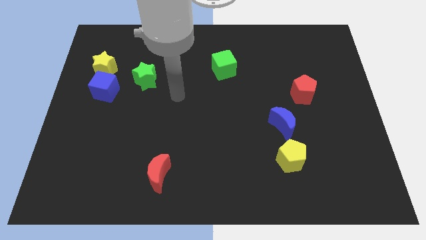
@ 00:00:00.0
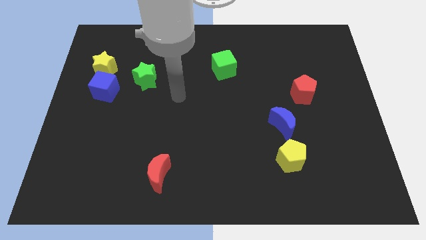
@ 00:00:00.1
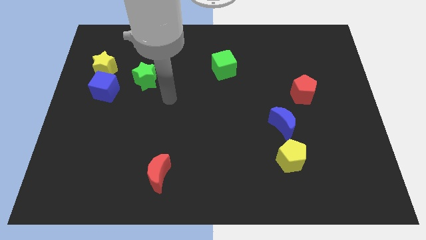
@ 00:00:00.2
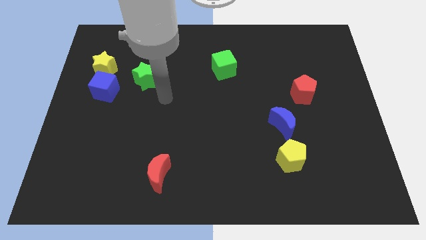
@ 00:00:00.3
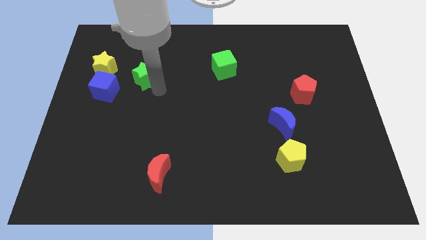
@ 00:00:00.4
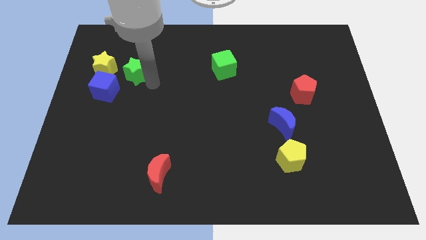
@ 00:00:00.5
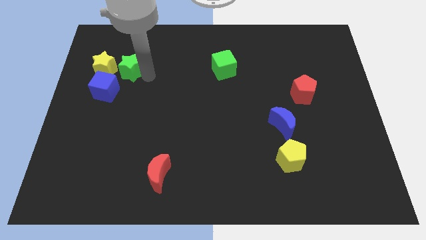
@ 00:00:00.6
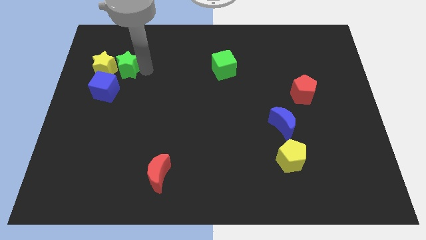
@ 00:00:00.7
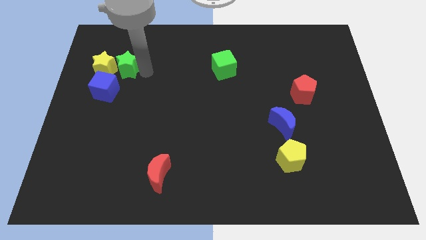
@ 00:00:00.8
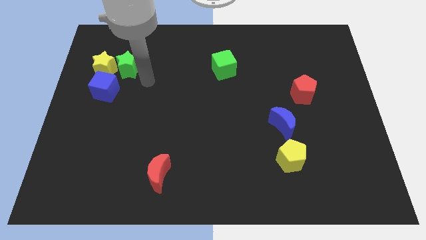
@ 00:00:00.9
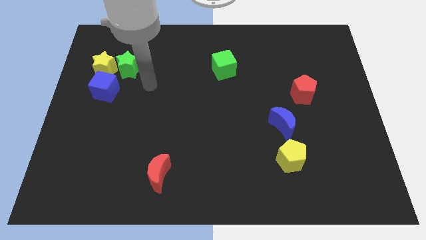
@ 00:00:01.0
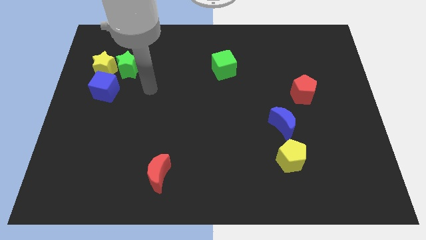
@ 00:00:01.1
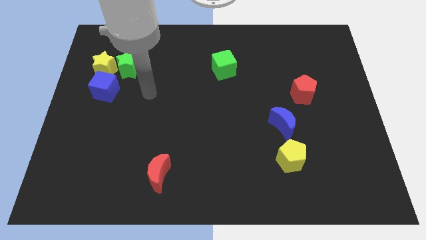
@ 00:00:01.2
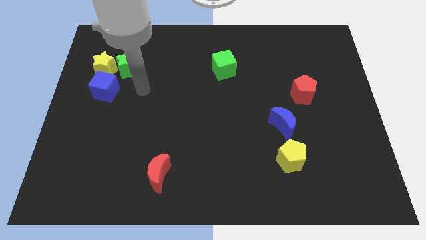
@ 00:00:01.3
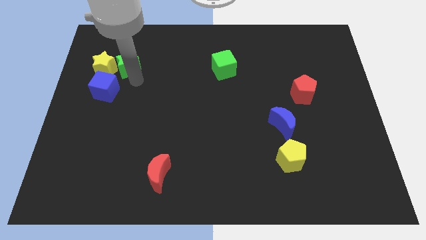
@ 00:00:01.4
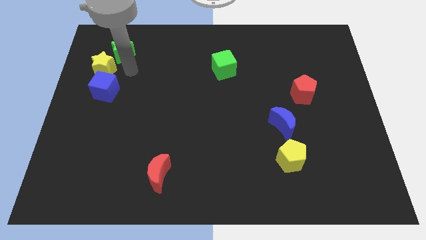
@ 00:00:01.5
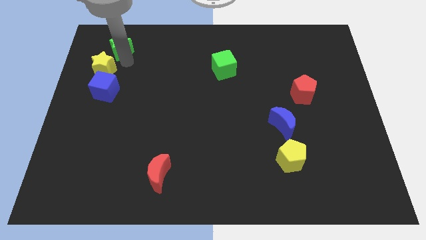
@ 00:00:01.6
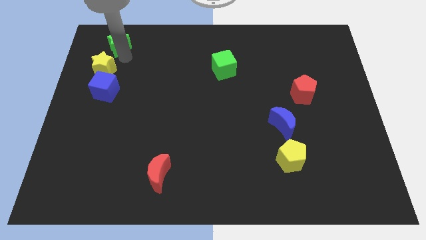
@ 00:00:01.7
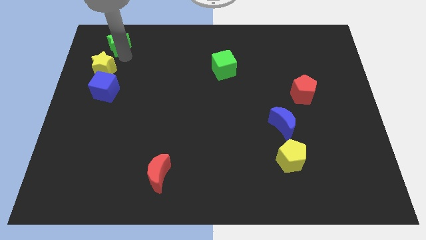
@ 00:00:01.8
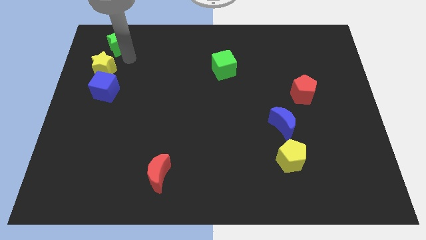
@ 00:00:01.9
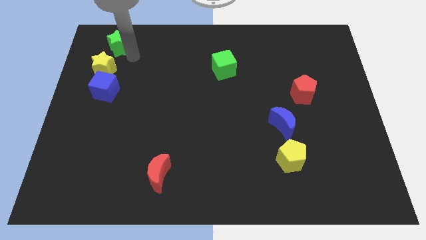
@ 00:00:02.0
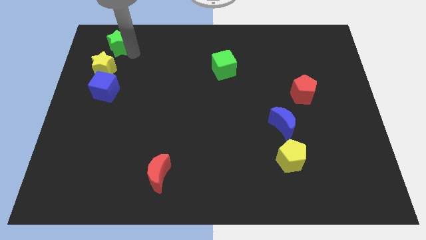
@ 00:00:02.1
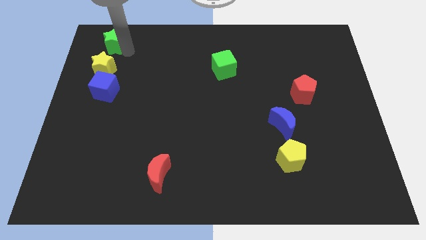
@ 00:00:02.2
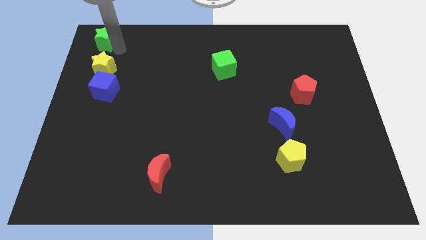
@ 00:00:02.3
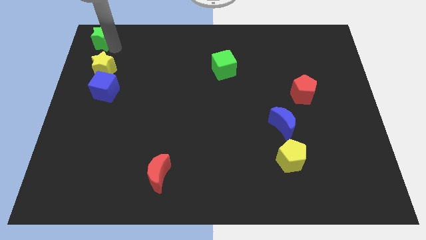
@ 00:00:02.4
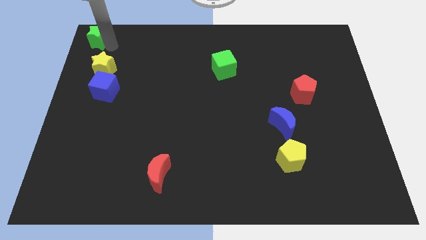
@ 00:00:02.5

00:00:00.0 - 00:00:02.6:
place the green star above the yellow star

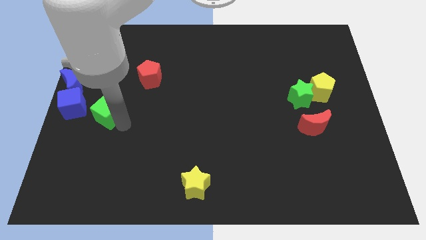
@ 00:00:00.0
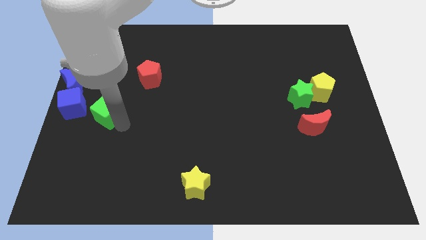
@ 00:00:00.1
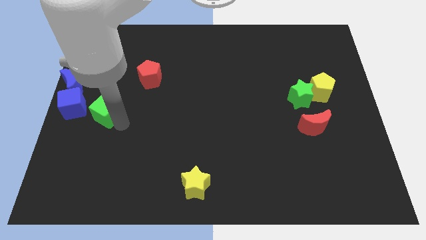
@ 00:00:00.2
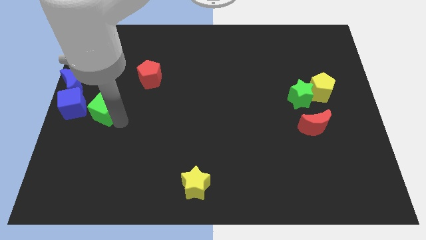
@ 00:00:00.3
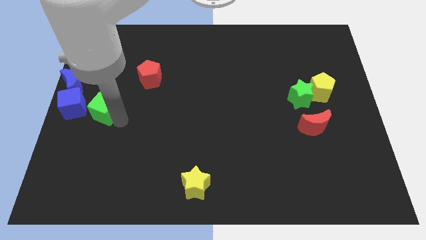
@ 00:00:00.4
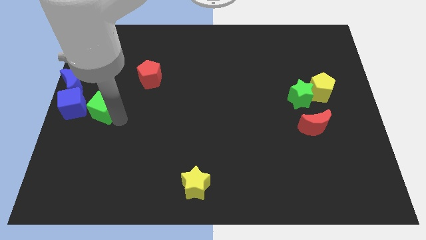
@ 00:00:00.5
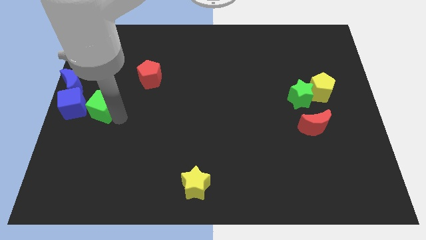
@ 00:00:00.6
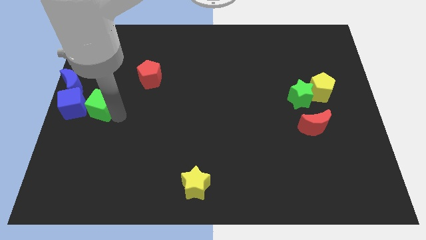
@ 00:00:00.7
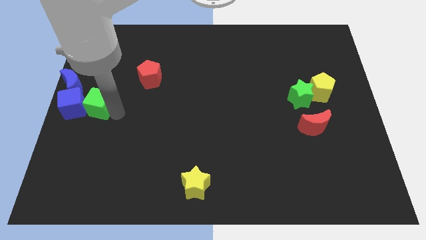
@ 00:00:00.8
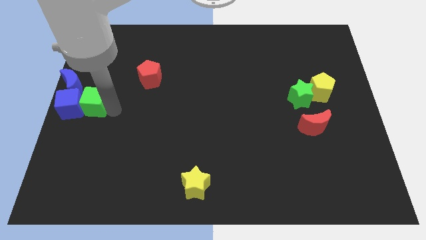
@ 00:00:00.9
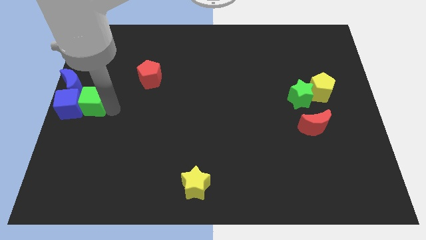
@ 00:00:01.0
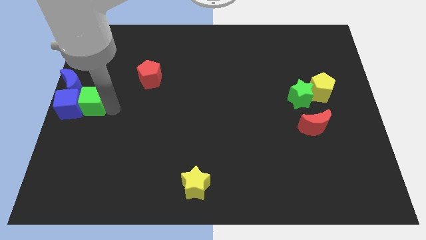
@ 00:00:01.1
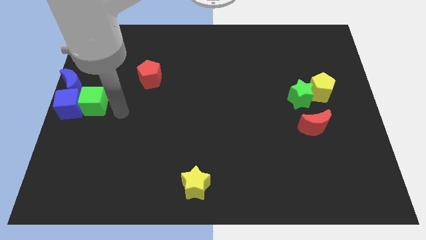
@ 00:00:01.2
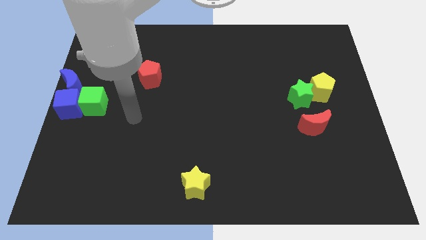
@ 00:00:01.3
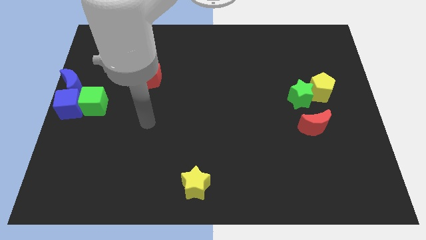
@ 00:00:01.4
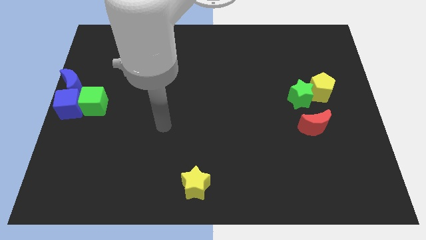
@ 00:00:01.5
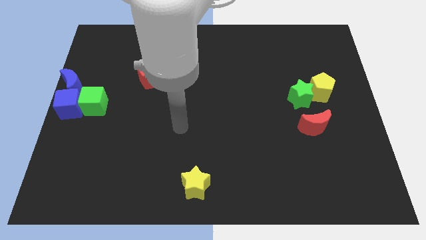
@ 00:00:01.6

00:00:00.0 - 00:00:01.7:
put the green cube into the blue cube

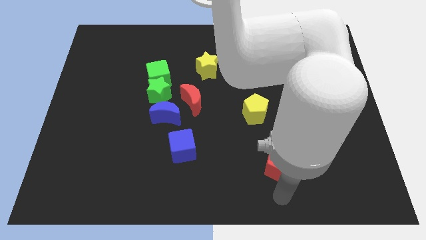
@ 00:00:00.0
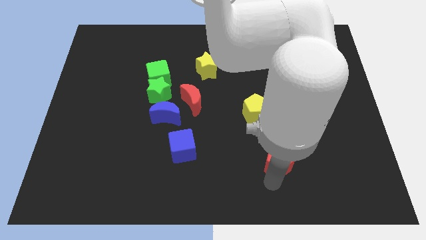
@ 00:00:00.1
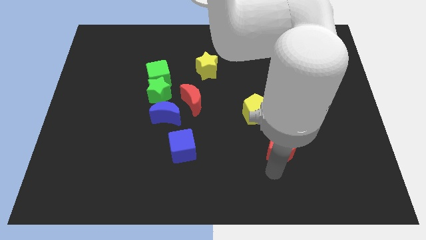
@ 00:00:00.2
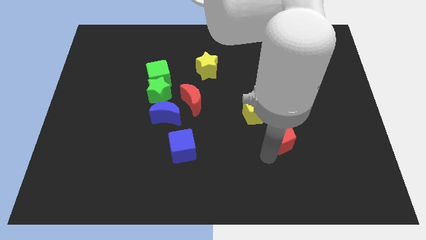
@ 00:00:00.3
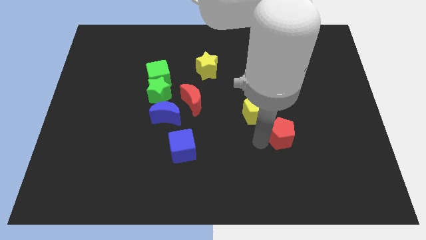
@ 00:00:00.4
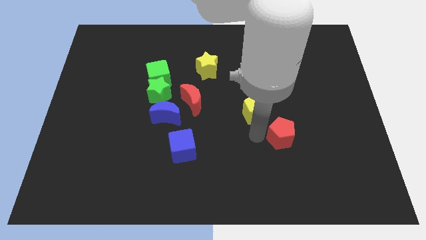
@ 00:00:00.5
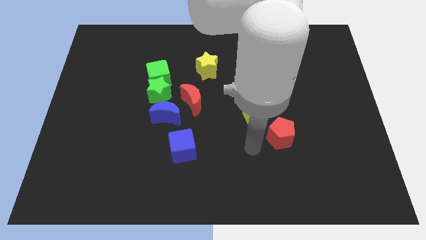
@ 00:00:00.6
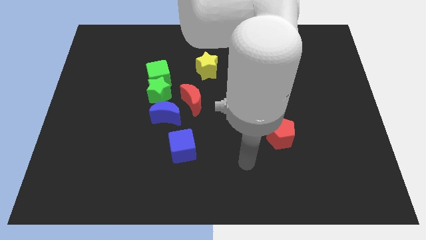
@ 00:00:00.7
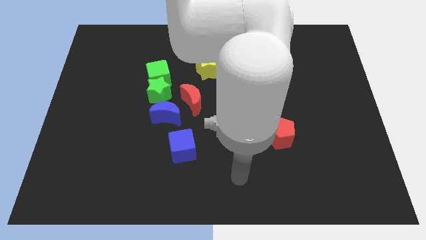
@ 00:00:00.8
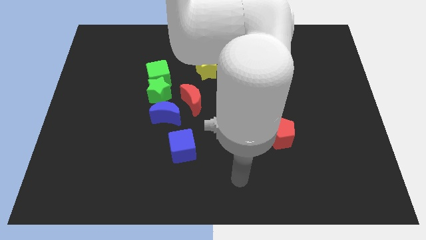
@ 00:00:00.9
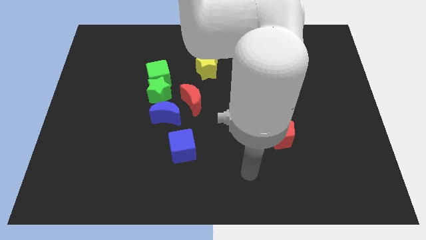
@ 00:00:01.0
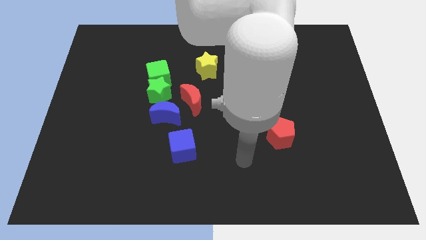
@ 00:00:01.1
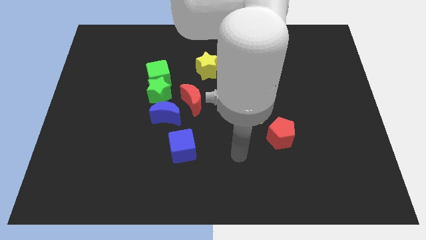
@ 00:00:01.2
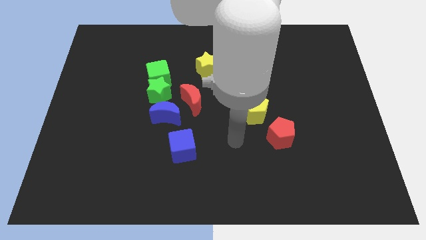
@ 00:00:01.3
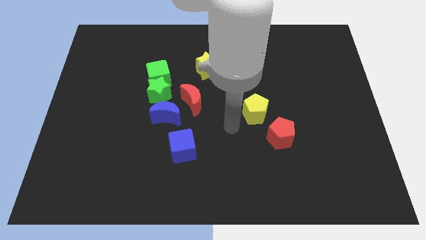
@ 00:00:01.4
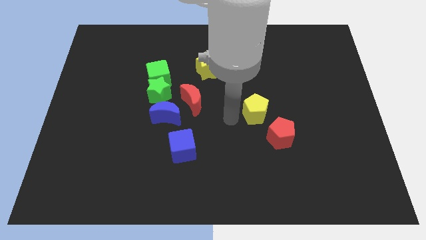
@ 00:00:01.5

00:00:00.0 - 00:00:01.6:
put the red pentagon to the right of the blue cube

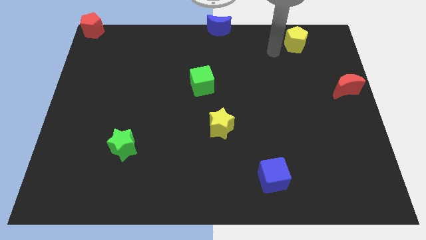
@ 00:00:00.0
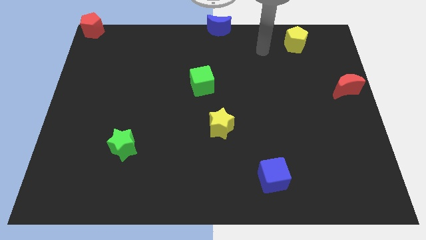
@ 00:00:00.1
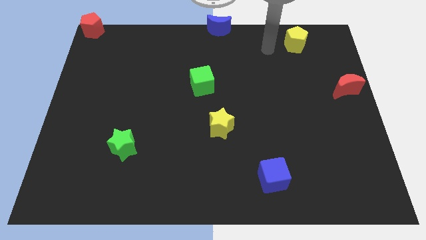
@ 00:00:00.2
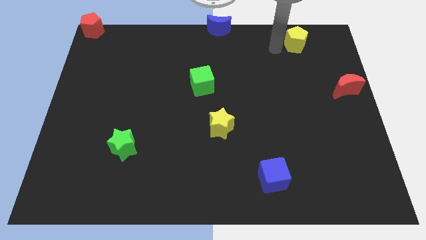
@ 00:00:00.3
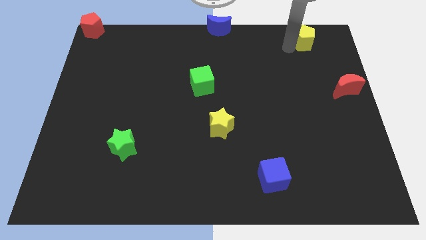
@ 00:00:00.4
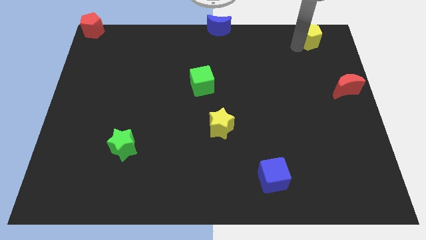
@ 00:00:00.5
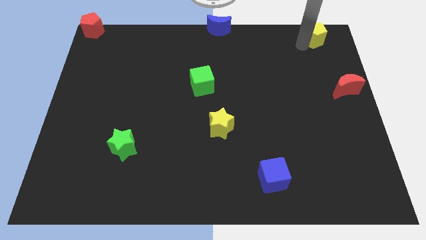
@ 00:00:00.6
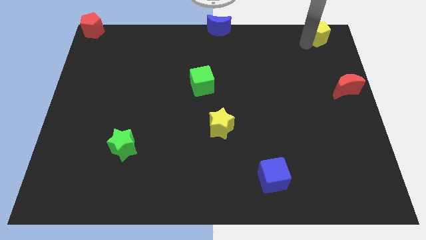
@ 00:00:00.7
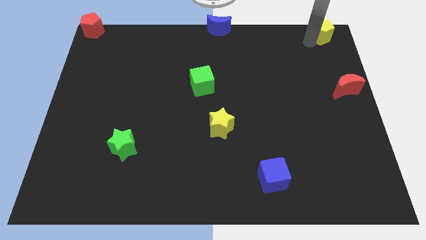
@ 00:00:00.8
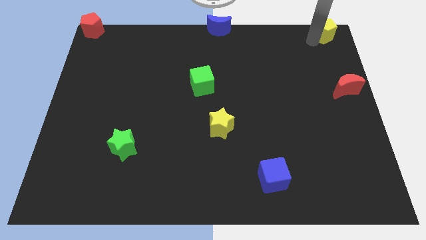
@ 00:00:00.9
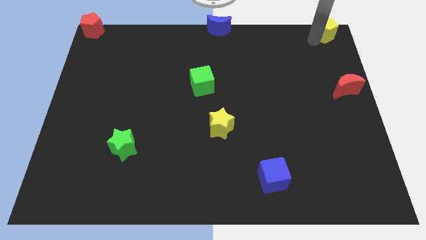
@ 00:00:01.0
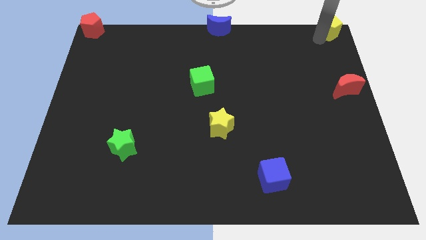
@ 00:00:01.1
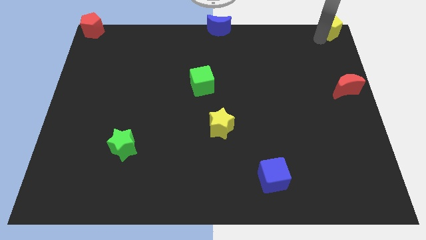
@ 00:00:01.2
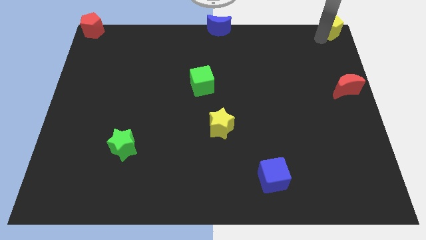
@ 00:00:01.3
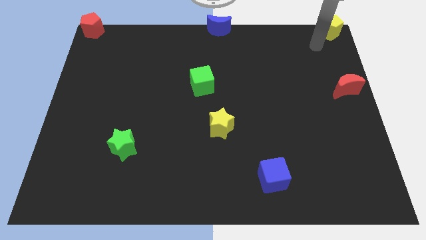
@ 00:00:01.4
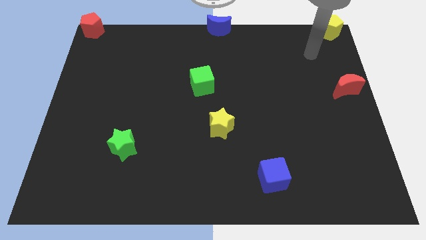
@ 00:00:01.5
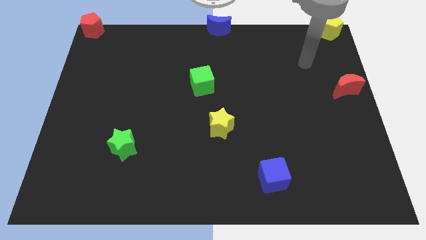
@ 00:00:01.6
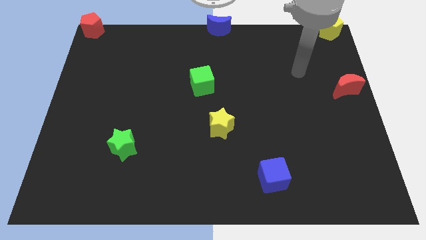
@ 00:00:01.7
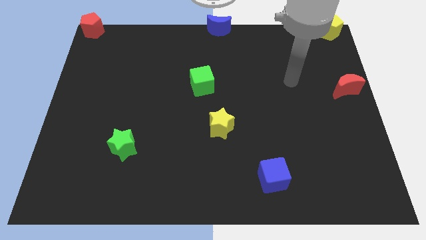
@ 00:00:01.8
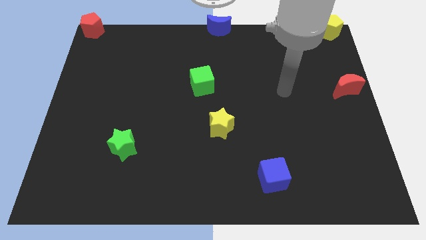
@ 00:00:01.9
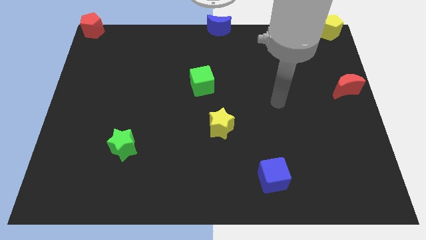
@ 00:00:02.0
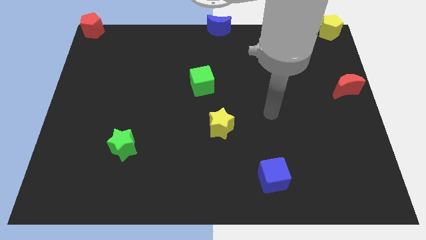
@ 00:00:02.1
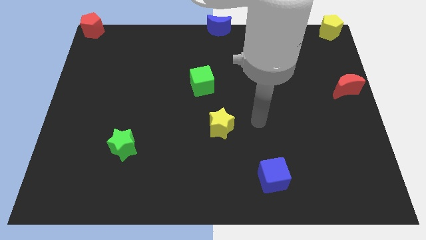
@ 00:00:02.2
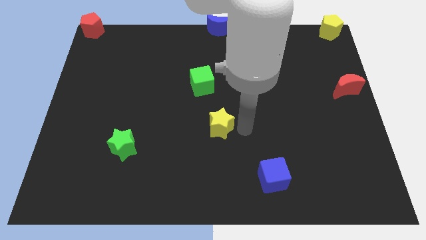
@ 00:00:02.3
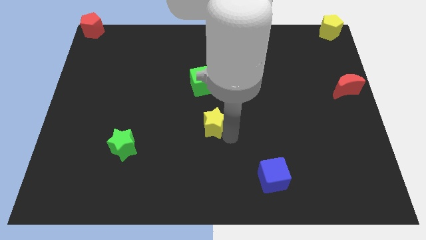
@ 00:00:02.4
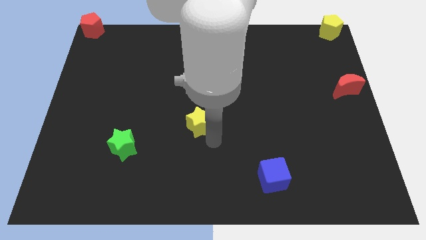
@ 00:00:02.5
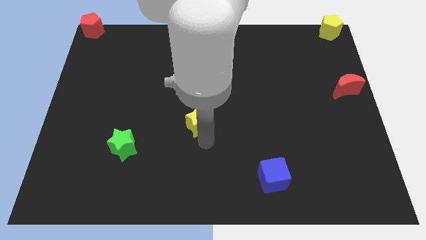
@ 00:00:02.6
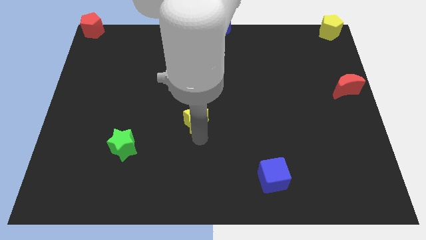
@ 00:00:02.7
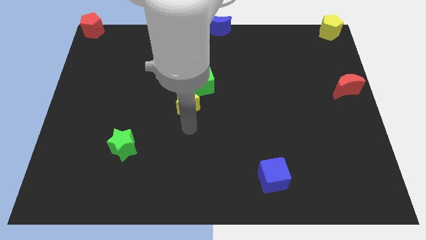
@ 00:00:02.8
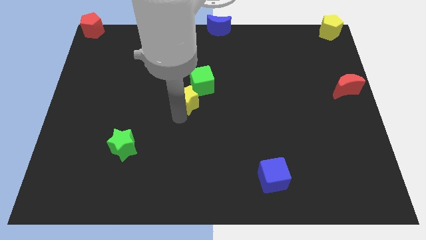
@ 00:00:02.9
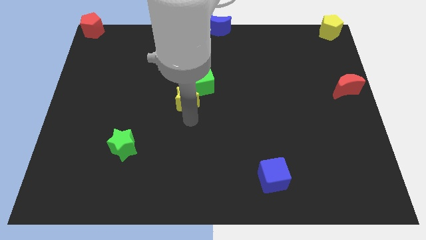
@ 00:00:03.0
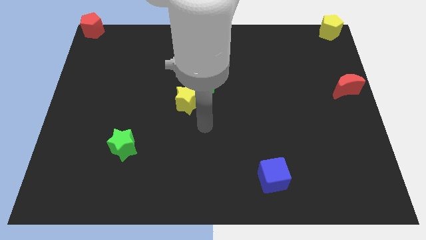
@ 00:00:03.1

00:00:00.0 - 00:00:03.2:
place yellow pentagon to the top right corner of the board
